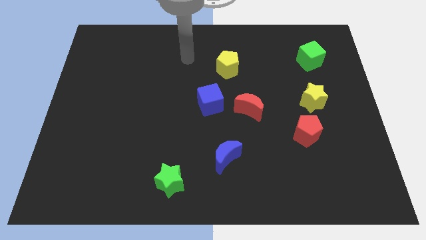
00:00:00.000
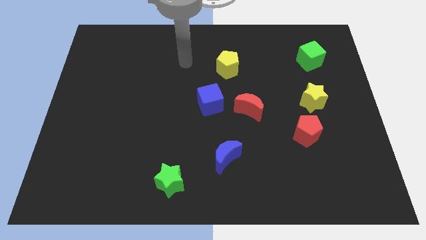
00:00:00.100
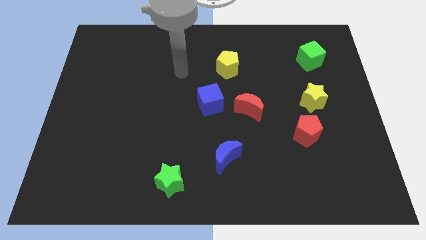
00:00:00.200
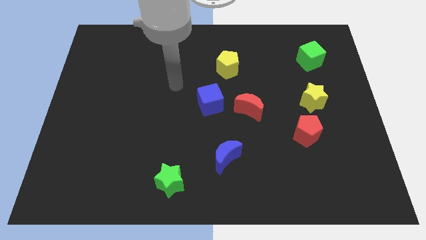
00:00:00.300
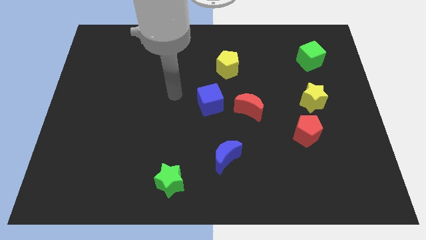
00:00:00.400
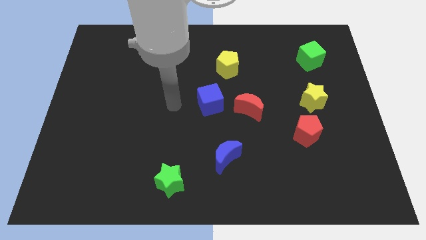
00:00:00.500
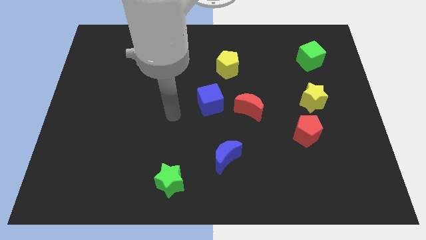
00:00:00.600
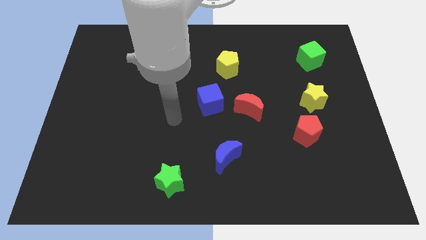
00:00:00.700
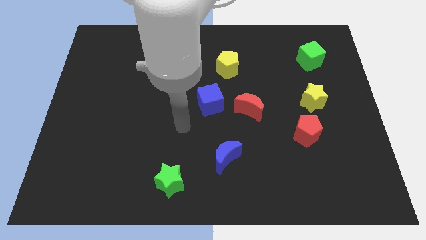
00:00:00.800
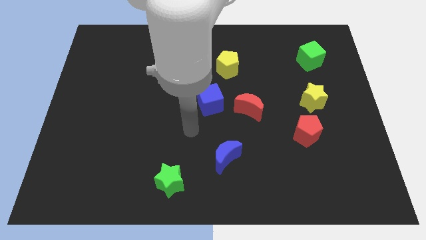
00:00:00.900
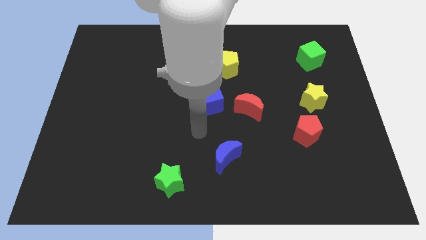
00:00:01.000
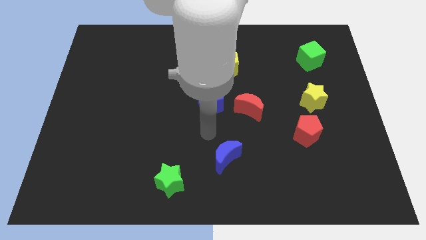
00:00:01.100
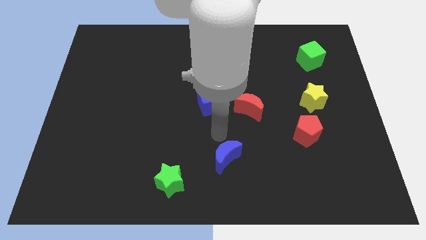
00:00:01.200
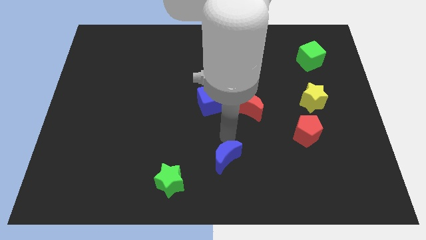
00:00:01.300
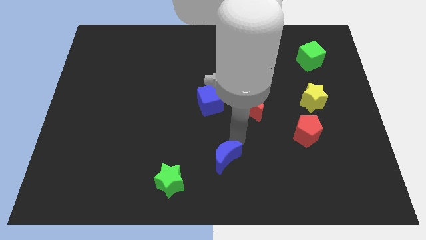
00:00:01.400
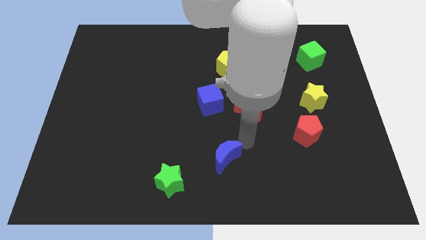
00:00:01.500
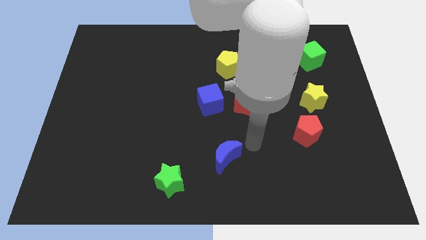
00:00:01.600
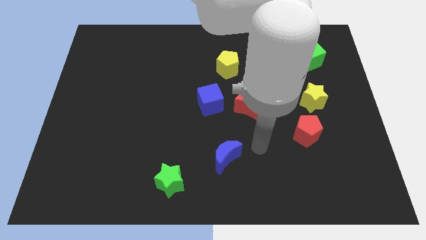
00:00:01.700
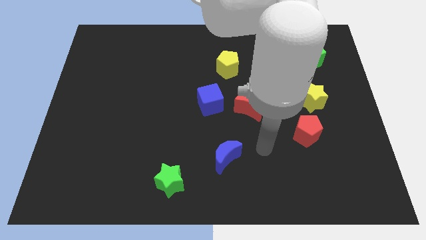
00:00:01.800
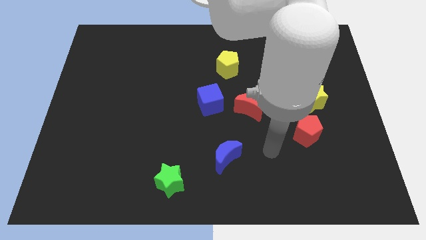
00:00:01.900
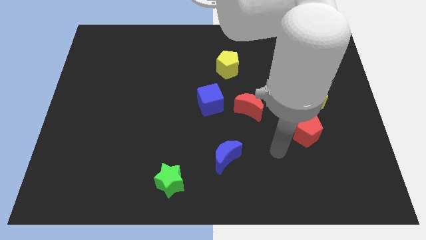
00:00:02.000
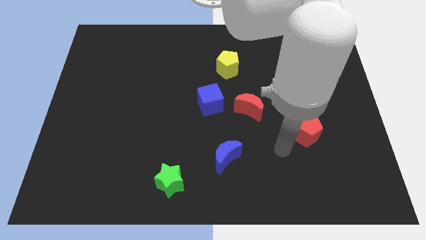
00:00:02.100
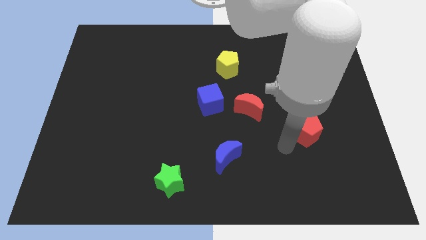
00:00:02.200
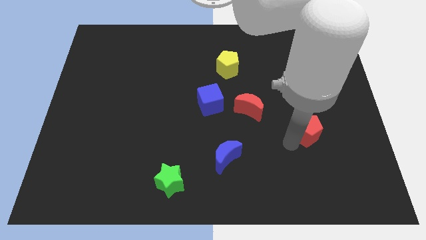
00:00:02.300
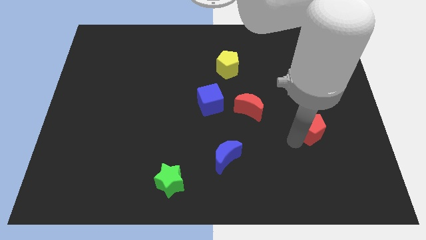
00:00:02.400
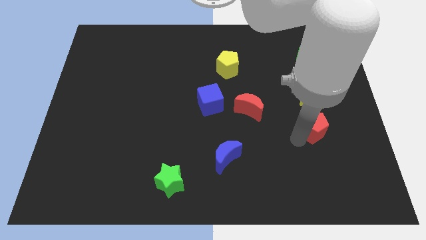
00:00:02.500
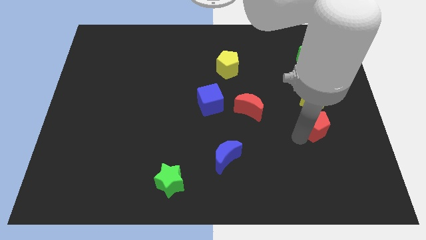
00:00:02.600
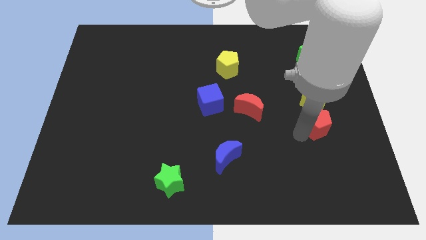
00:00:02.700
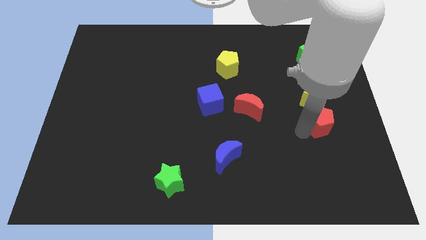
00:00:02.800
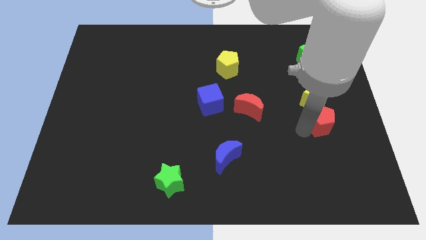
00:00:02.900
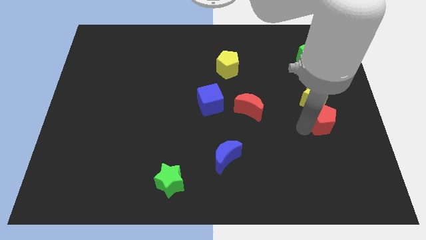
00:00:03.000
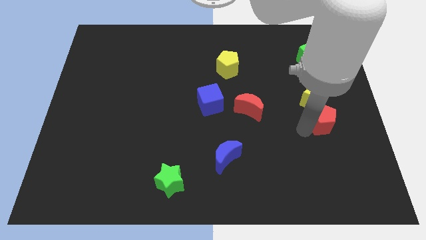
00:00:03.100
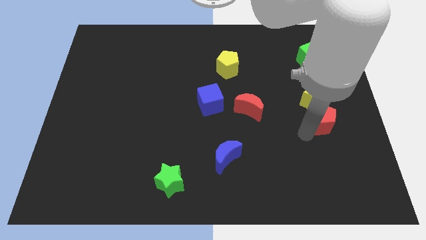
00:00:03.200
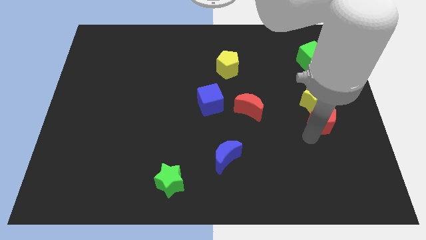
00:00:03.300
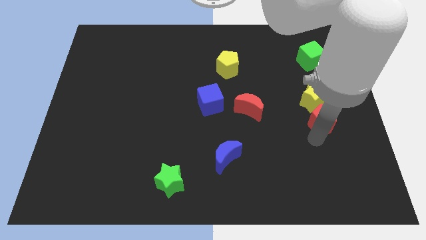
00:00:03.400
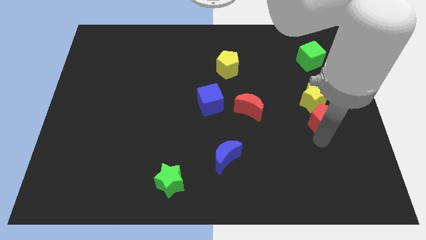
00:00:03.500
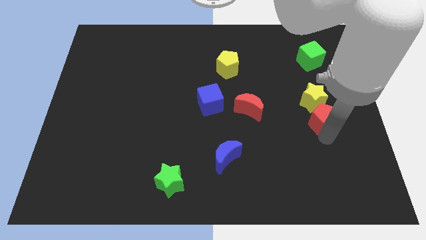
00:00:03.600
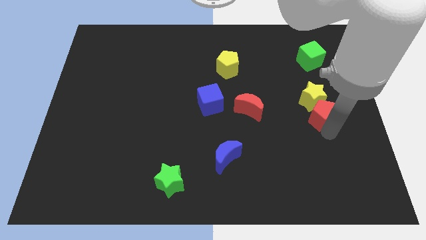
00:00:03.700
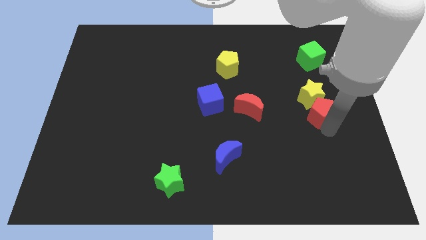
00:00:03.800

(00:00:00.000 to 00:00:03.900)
slide the red pentagon towards the yellow star

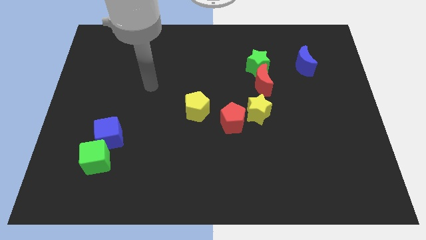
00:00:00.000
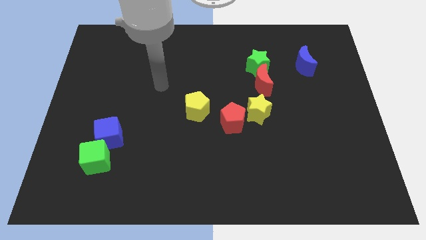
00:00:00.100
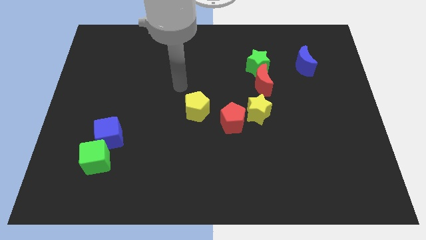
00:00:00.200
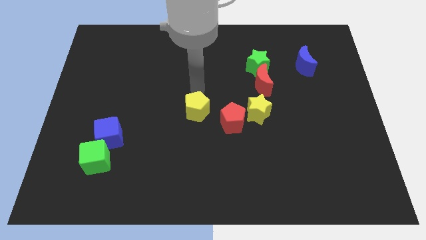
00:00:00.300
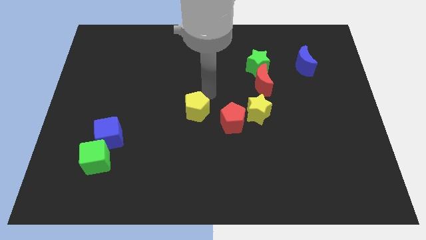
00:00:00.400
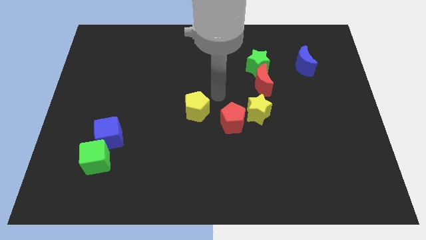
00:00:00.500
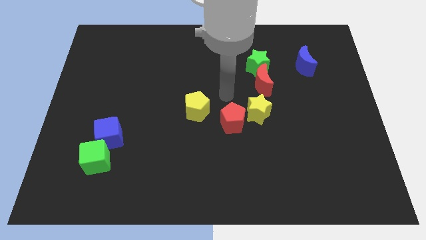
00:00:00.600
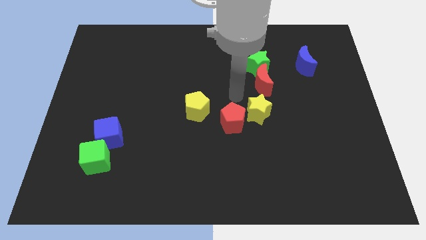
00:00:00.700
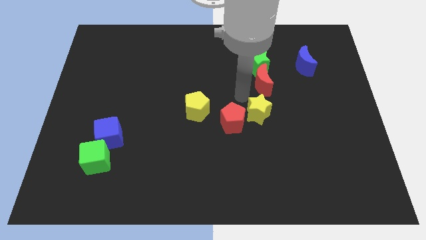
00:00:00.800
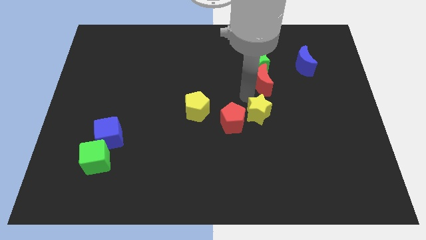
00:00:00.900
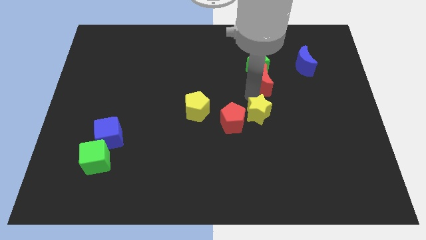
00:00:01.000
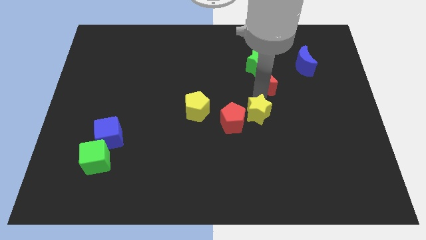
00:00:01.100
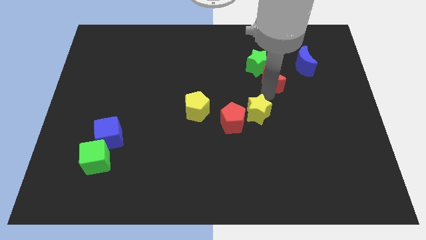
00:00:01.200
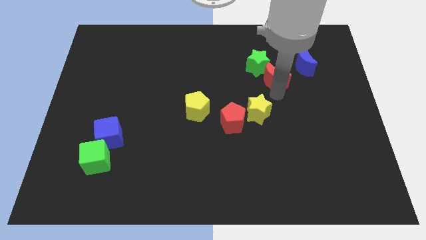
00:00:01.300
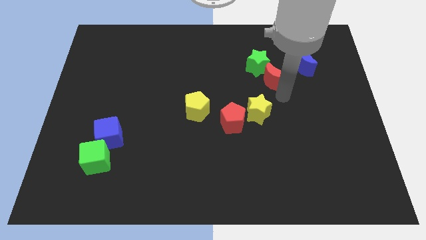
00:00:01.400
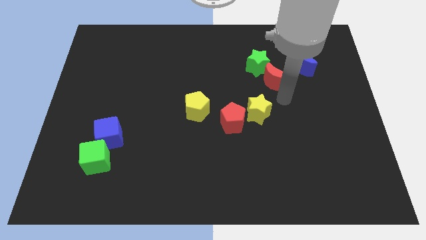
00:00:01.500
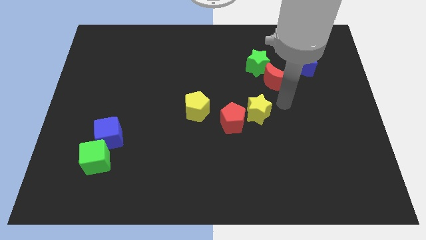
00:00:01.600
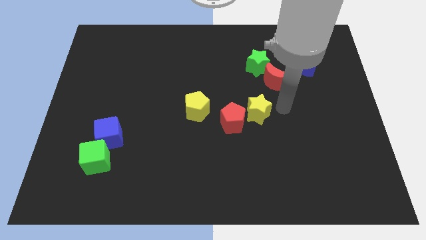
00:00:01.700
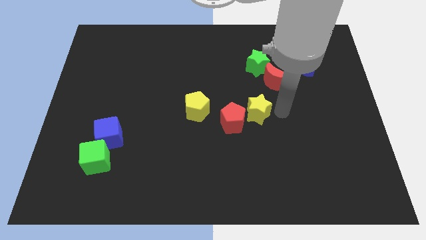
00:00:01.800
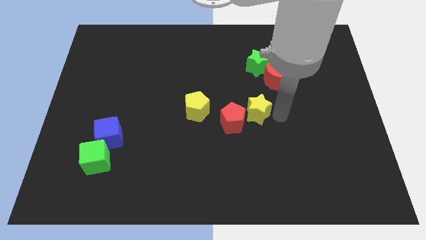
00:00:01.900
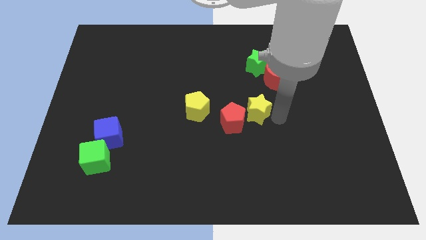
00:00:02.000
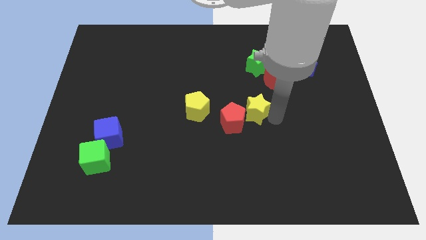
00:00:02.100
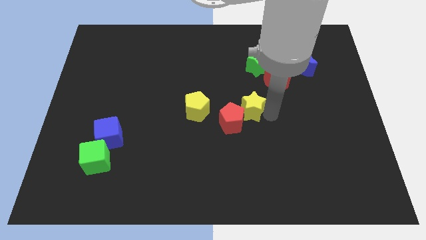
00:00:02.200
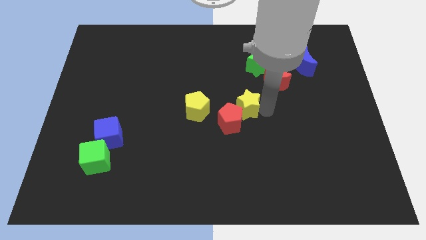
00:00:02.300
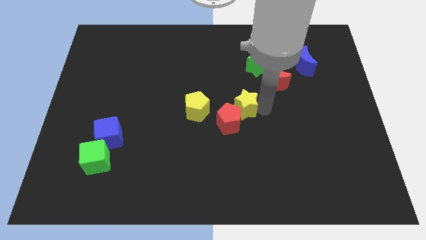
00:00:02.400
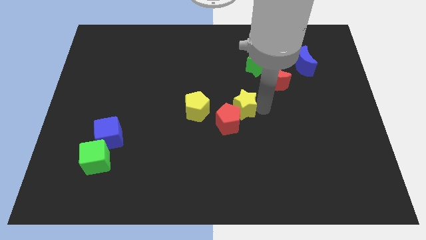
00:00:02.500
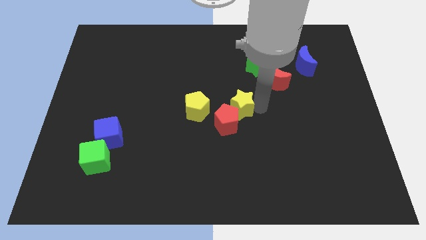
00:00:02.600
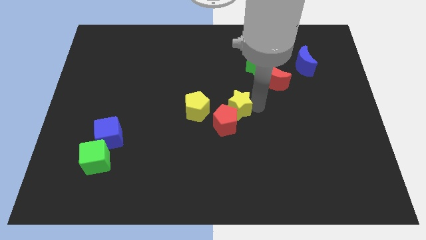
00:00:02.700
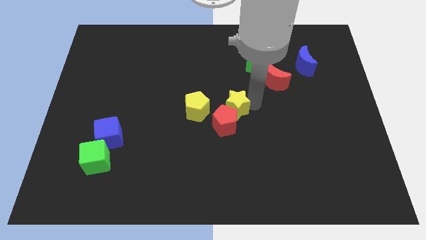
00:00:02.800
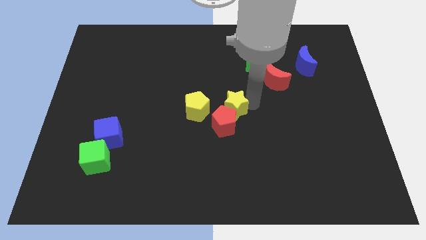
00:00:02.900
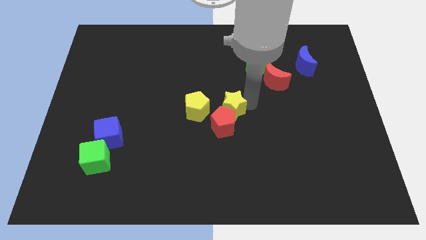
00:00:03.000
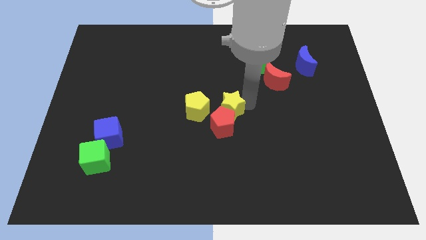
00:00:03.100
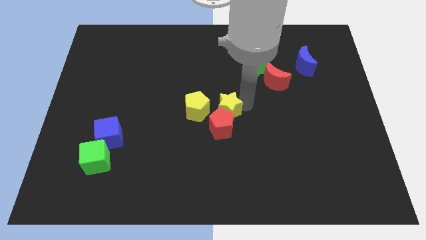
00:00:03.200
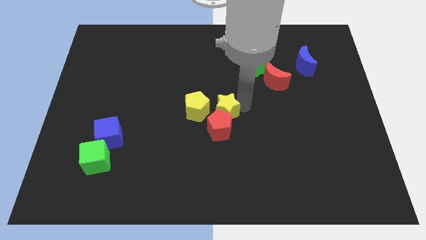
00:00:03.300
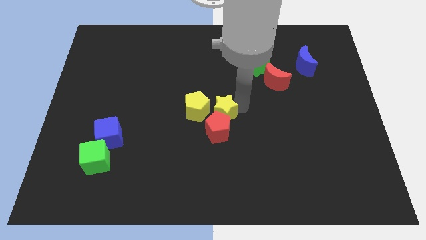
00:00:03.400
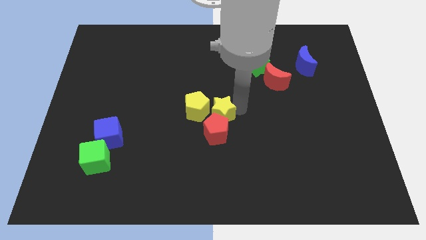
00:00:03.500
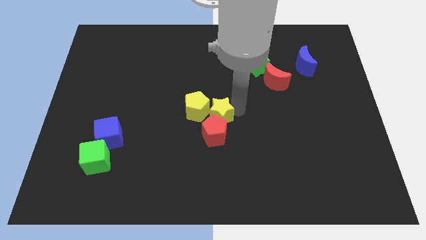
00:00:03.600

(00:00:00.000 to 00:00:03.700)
push the yellow star to the yellow pentagon

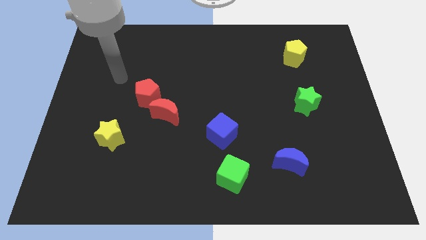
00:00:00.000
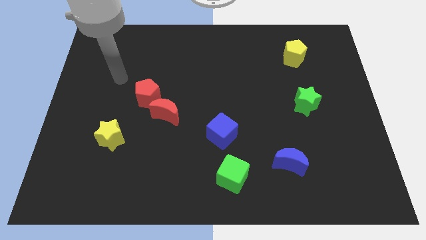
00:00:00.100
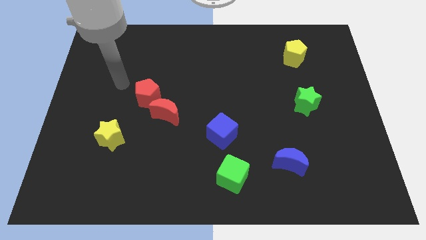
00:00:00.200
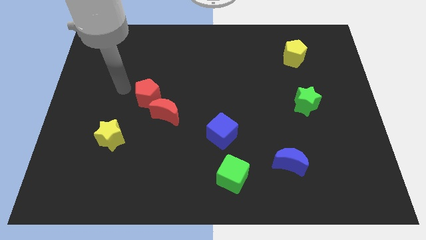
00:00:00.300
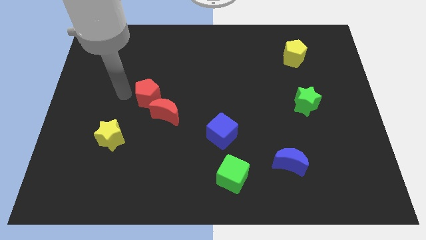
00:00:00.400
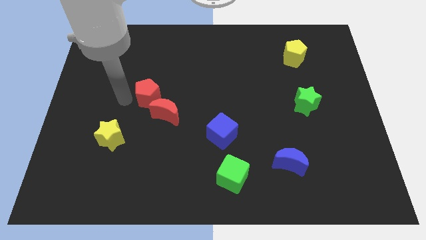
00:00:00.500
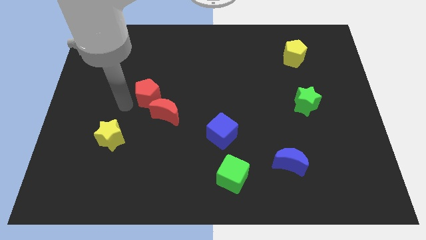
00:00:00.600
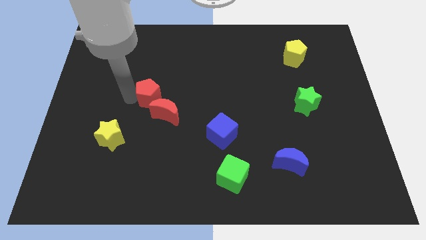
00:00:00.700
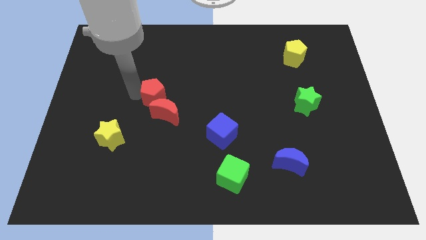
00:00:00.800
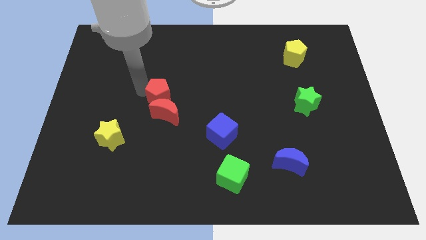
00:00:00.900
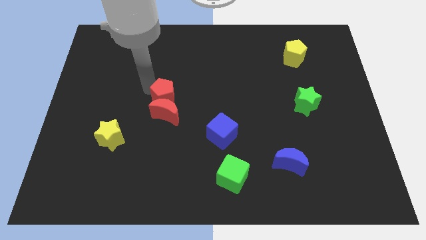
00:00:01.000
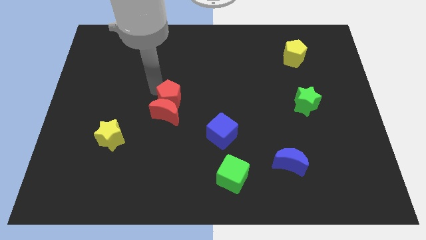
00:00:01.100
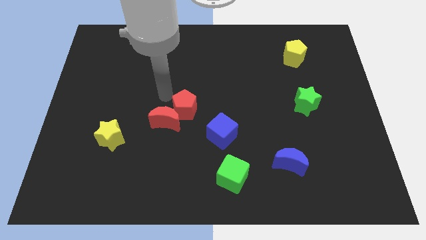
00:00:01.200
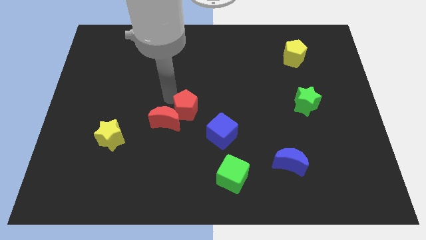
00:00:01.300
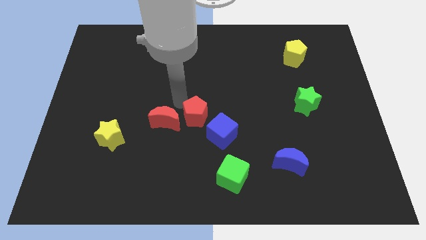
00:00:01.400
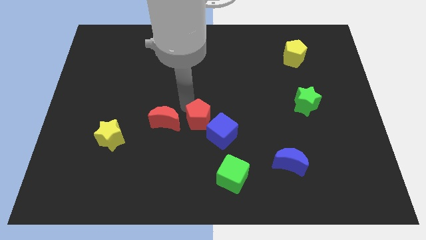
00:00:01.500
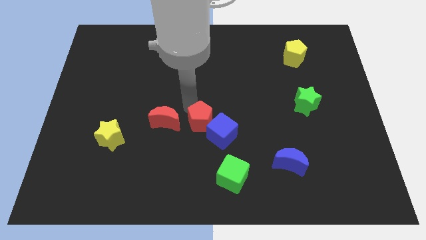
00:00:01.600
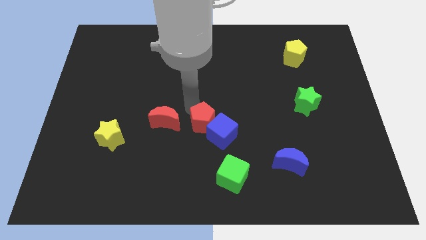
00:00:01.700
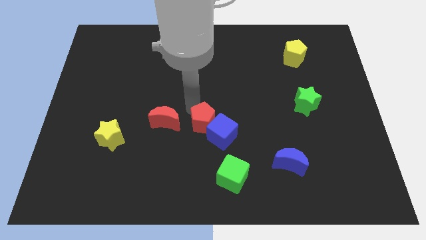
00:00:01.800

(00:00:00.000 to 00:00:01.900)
slide the red pentagon next to the blue cube
